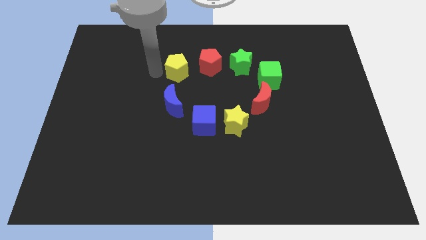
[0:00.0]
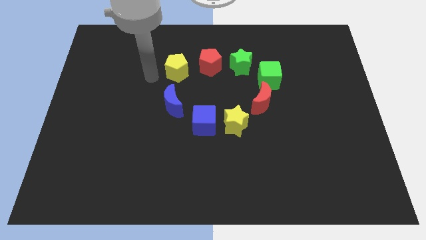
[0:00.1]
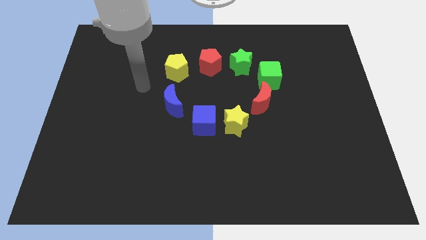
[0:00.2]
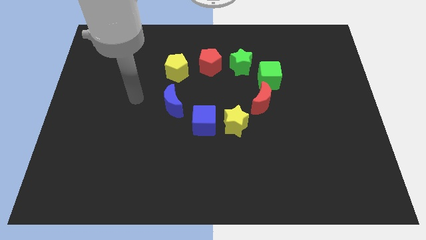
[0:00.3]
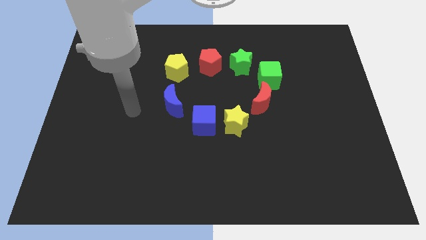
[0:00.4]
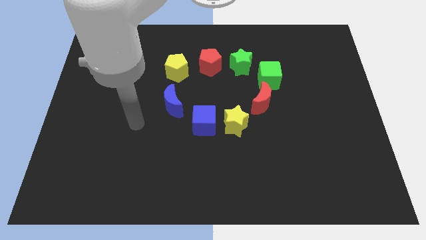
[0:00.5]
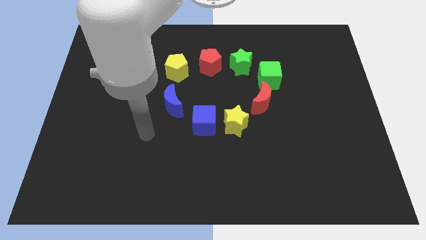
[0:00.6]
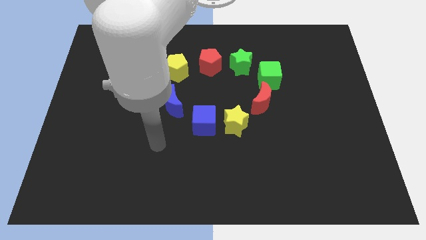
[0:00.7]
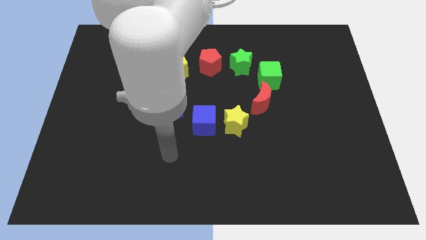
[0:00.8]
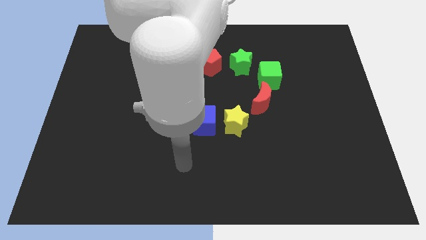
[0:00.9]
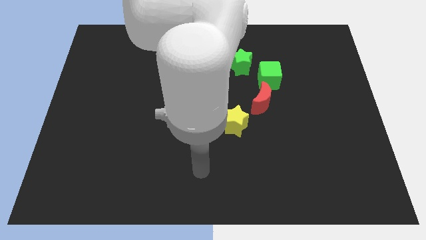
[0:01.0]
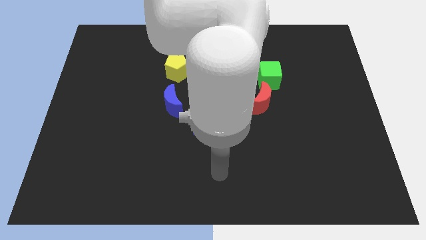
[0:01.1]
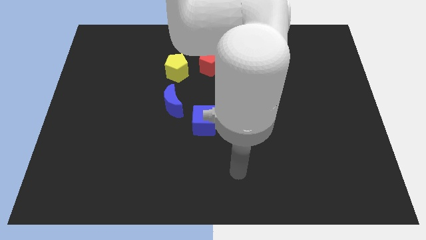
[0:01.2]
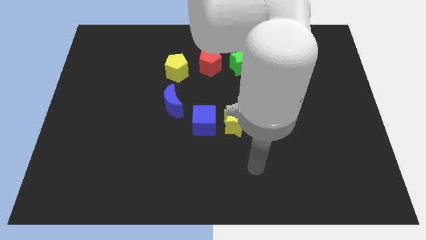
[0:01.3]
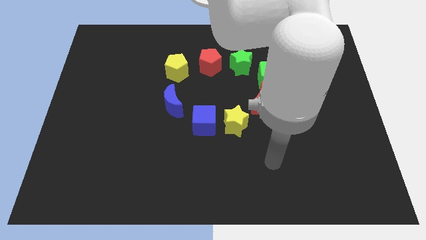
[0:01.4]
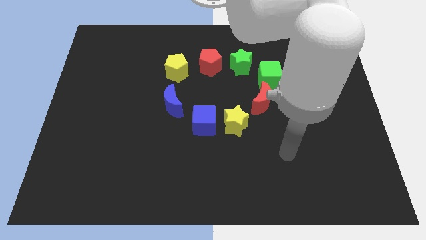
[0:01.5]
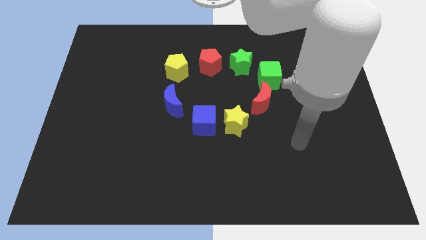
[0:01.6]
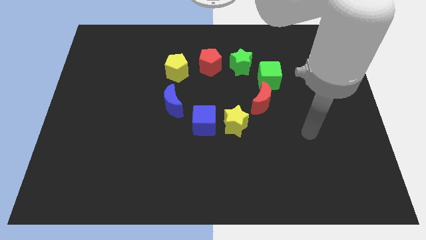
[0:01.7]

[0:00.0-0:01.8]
move your arm away from the yellow pentagon

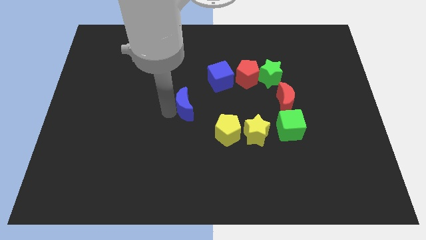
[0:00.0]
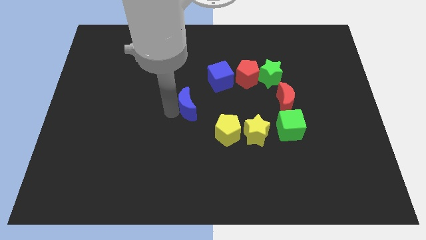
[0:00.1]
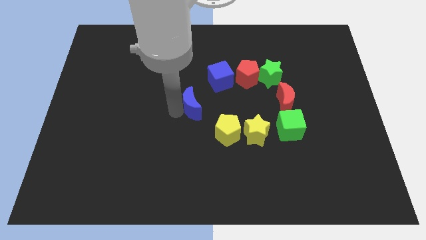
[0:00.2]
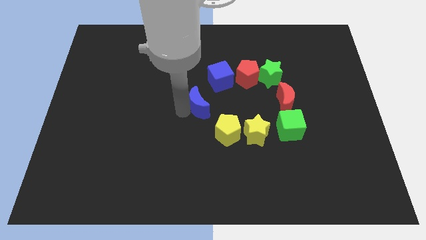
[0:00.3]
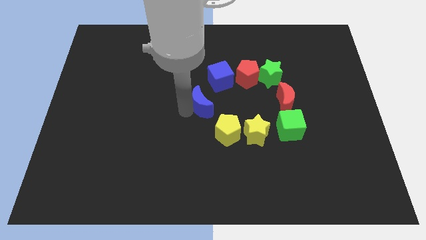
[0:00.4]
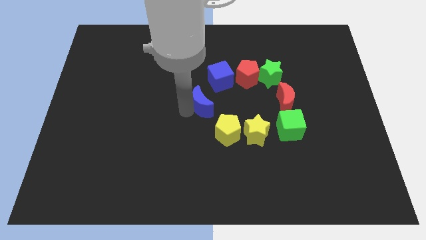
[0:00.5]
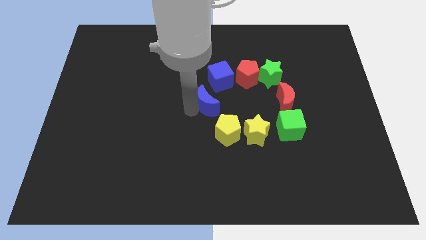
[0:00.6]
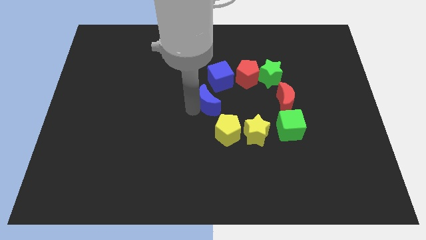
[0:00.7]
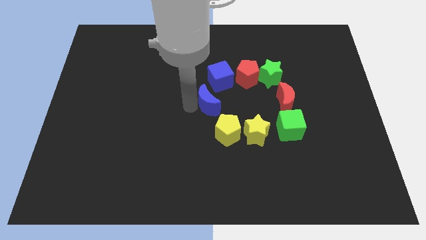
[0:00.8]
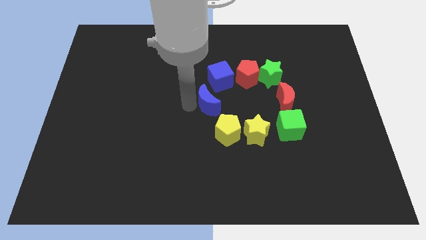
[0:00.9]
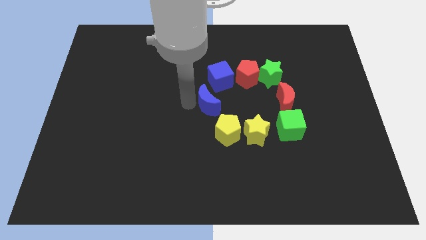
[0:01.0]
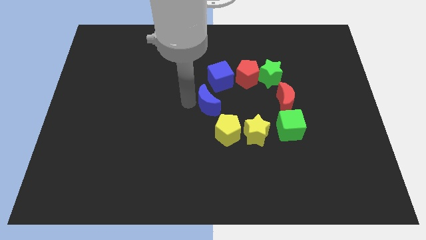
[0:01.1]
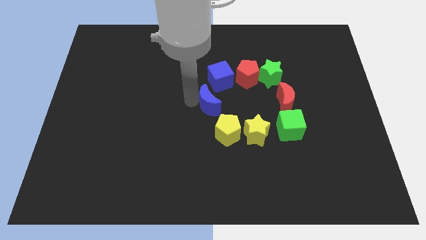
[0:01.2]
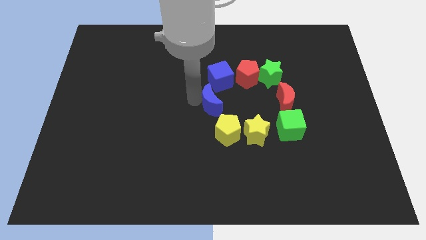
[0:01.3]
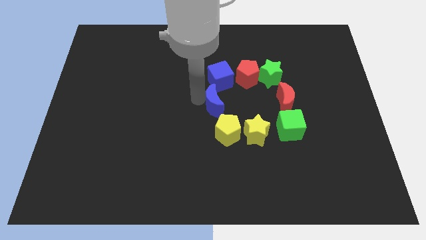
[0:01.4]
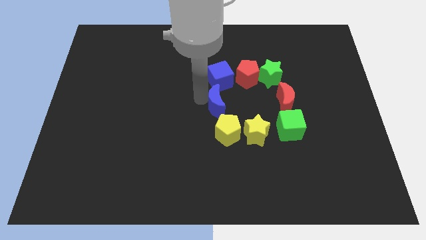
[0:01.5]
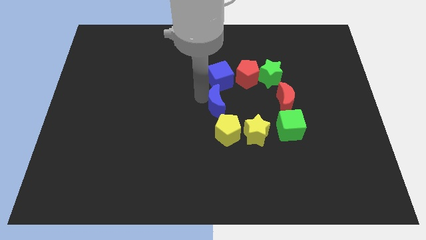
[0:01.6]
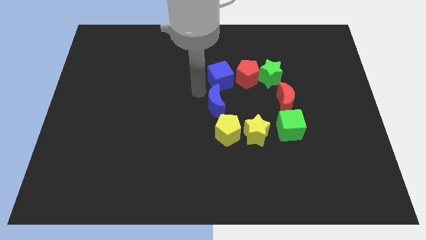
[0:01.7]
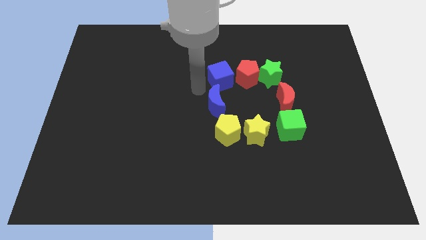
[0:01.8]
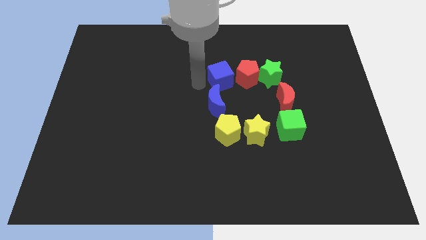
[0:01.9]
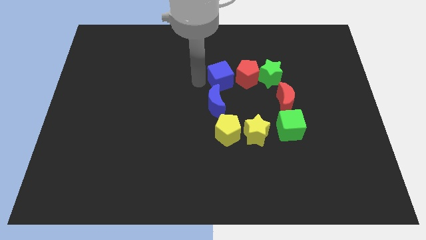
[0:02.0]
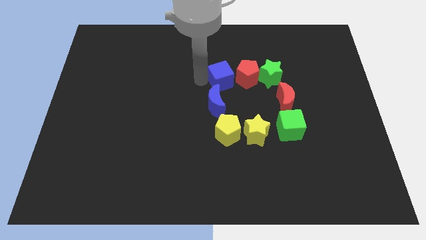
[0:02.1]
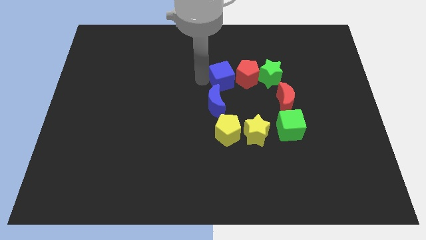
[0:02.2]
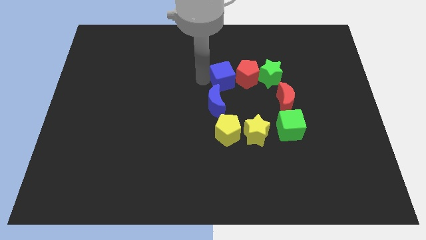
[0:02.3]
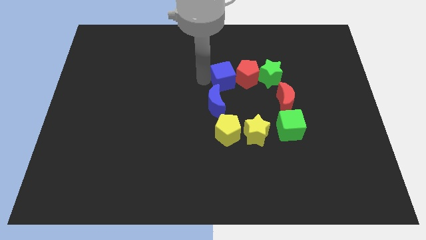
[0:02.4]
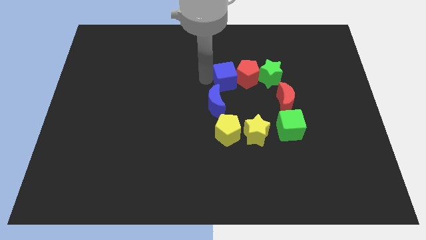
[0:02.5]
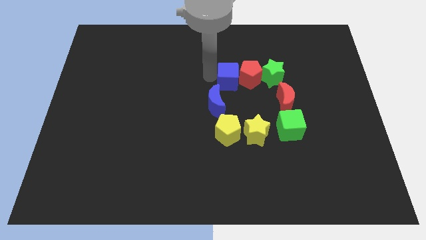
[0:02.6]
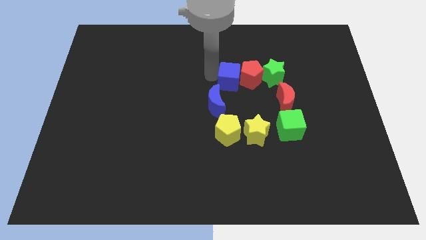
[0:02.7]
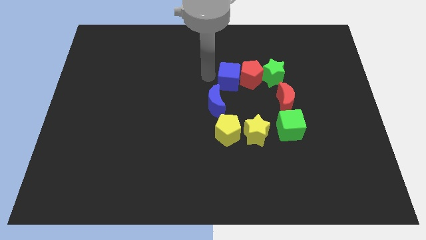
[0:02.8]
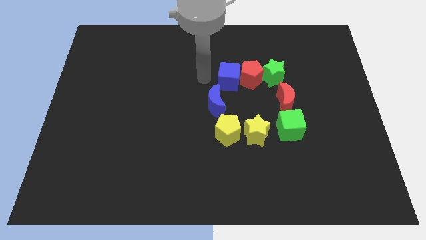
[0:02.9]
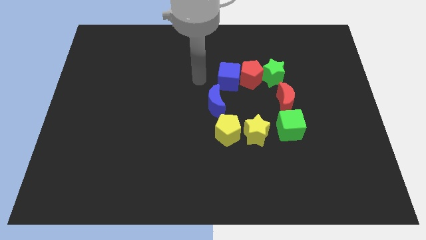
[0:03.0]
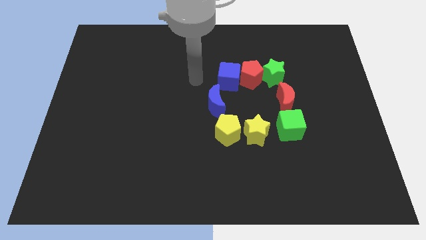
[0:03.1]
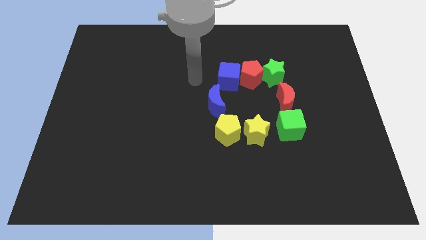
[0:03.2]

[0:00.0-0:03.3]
adjust both the blue blocks to form a square of blocks

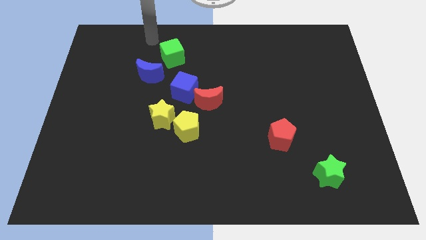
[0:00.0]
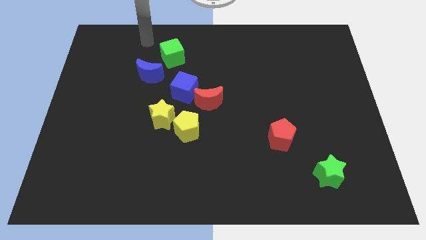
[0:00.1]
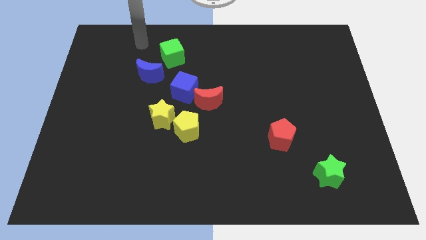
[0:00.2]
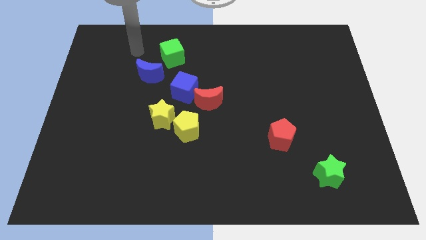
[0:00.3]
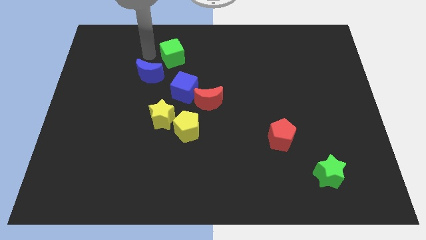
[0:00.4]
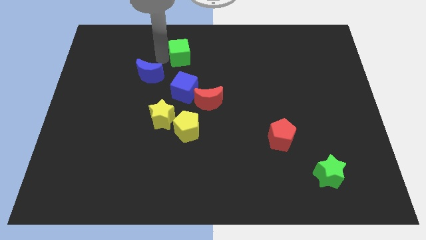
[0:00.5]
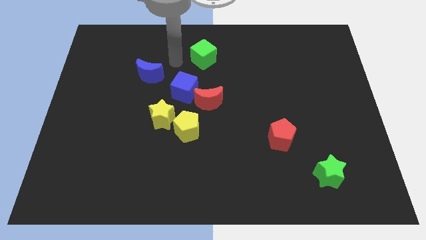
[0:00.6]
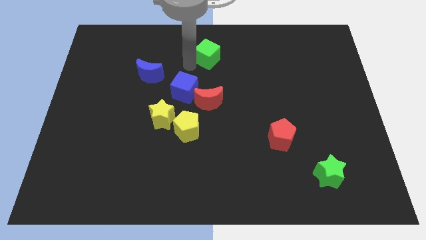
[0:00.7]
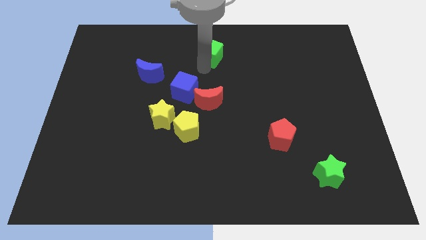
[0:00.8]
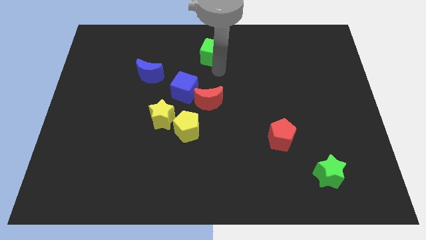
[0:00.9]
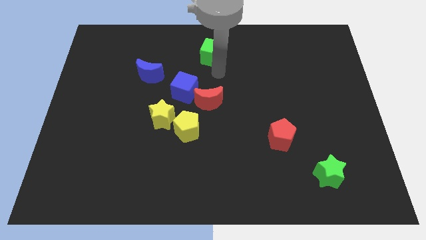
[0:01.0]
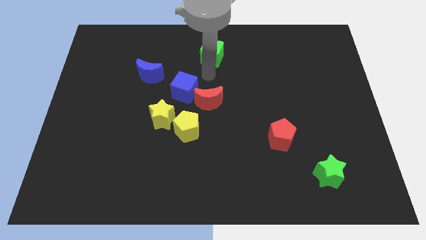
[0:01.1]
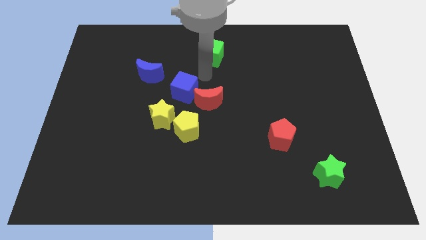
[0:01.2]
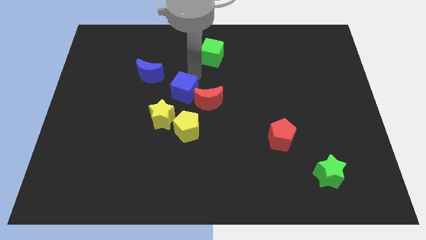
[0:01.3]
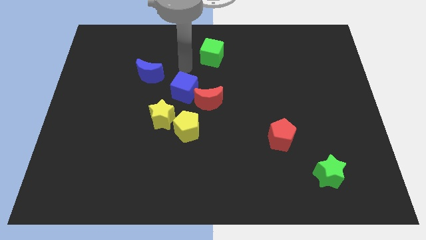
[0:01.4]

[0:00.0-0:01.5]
move the green cube towards the top center of the board

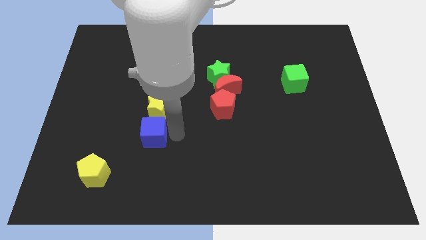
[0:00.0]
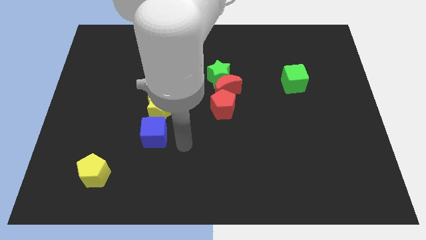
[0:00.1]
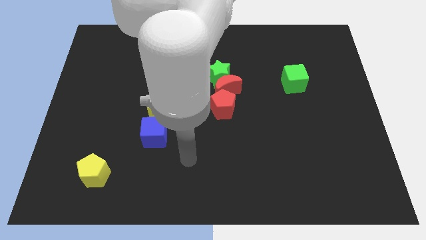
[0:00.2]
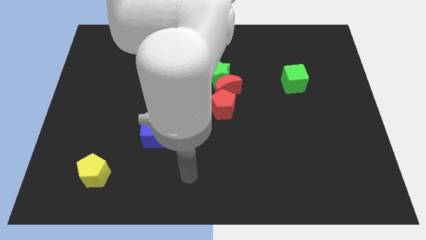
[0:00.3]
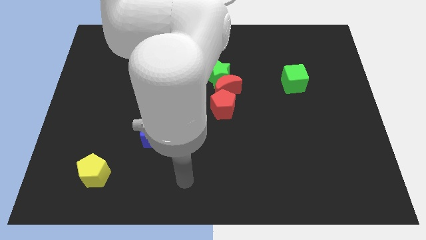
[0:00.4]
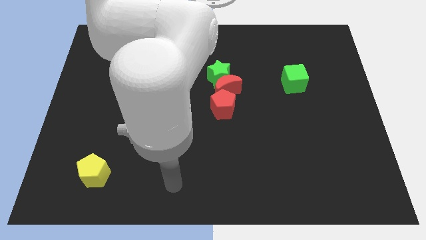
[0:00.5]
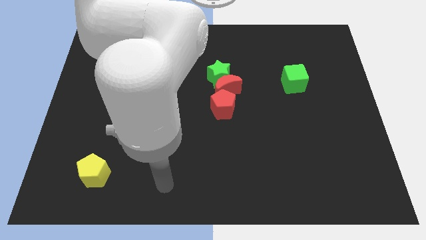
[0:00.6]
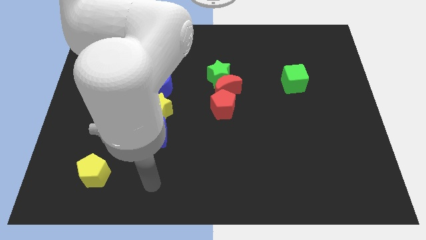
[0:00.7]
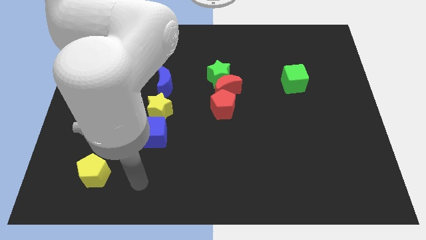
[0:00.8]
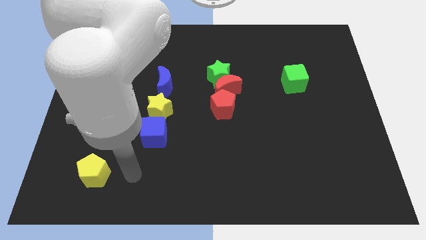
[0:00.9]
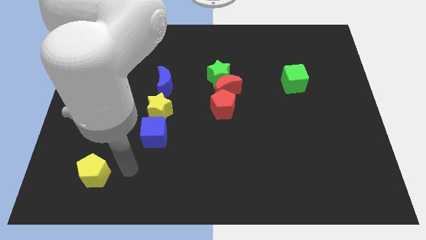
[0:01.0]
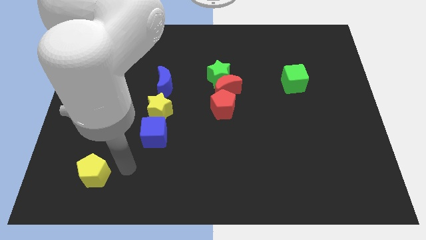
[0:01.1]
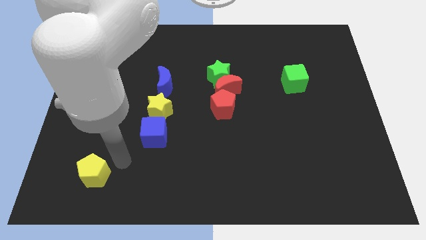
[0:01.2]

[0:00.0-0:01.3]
move your hand in between the yellow pentagon and blue cube

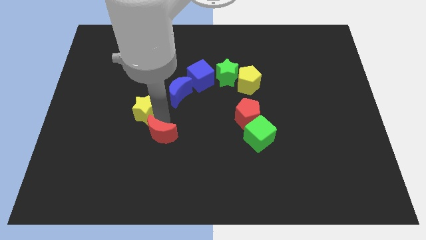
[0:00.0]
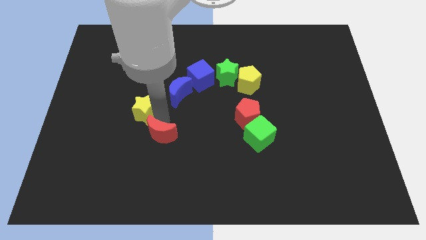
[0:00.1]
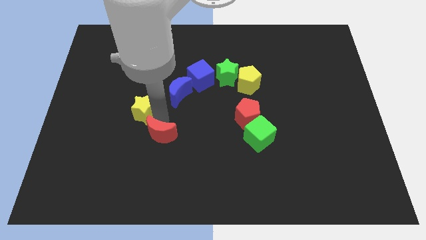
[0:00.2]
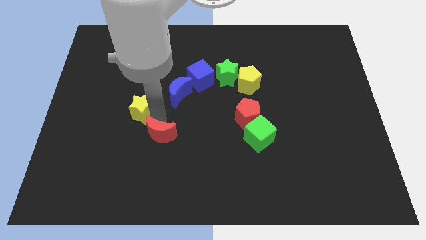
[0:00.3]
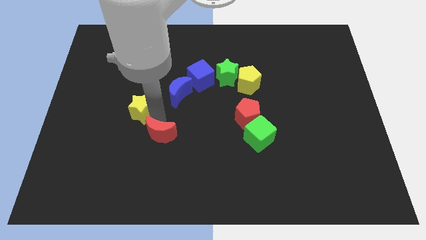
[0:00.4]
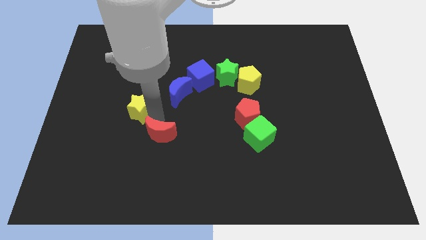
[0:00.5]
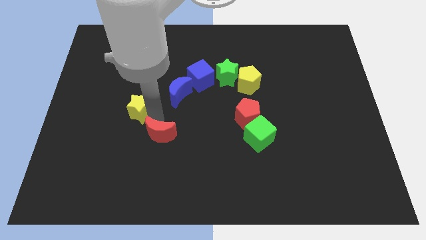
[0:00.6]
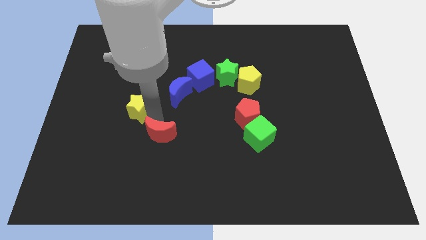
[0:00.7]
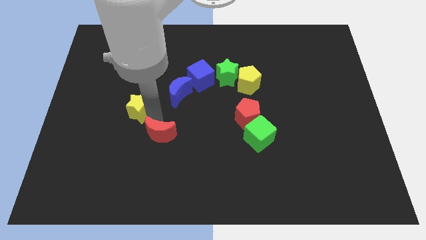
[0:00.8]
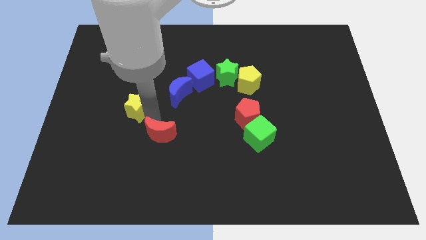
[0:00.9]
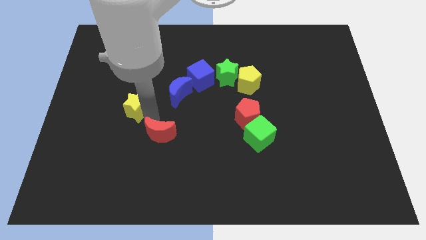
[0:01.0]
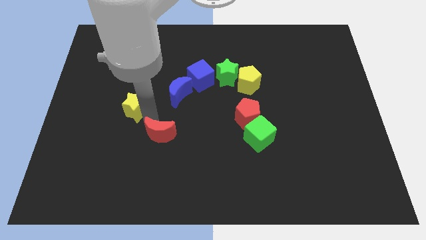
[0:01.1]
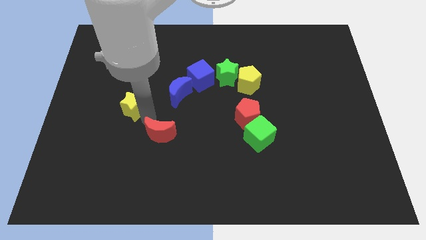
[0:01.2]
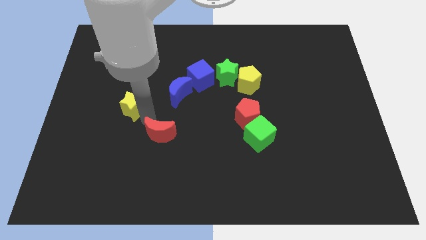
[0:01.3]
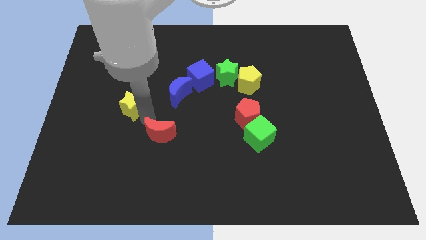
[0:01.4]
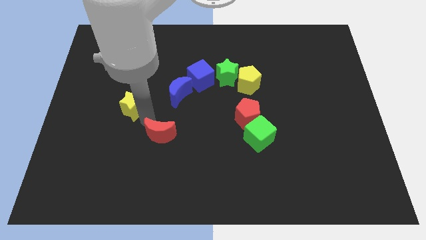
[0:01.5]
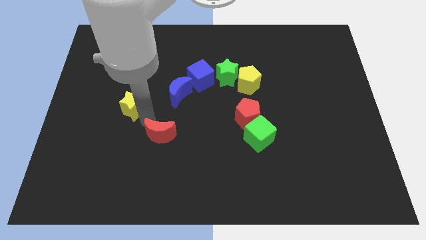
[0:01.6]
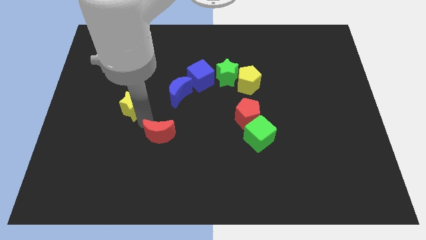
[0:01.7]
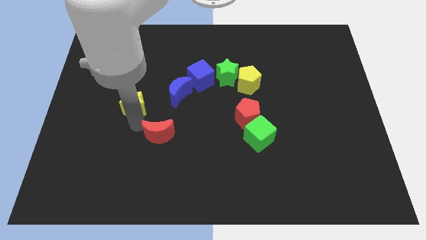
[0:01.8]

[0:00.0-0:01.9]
place your hand in between the red moon and the yellow star
